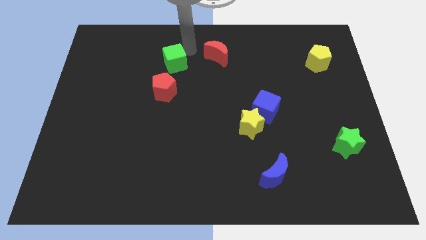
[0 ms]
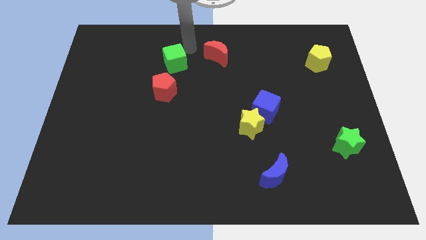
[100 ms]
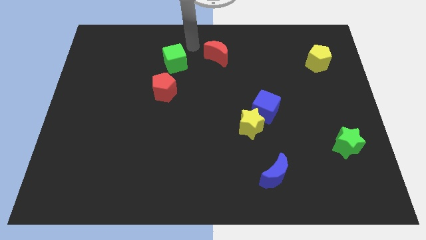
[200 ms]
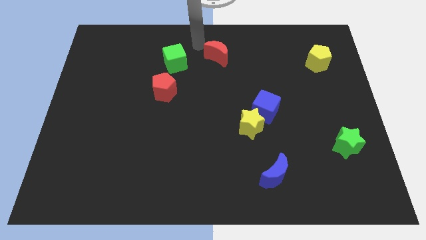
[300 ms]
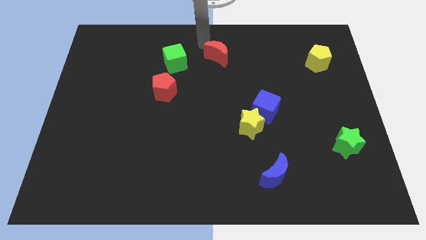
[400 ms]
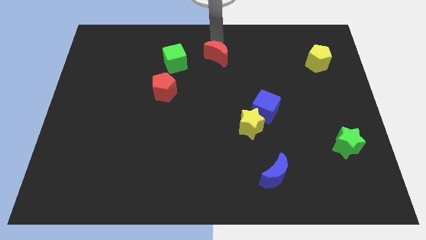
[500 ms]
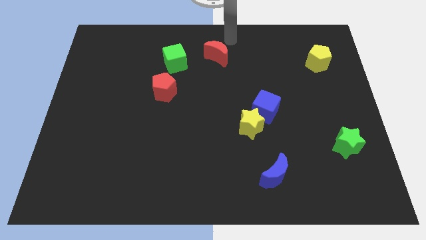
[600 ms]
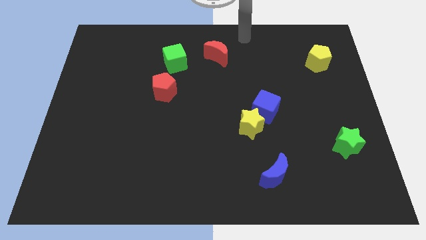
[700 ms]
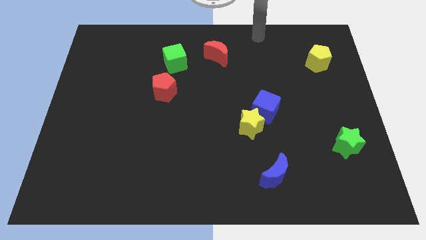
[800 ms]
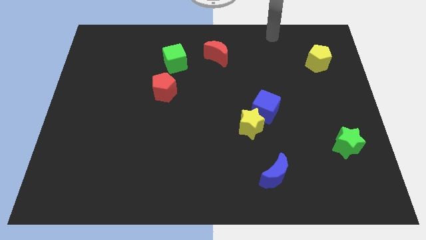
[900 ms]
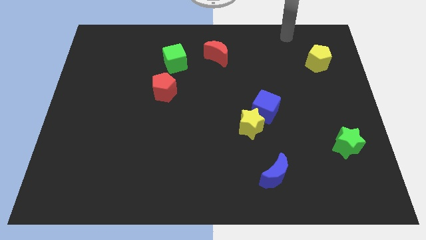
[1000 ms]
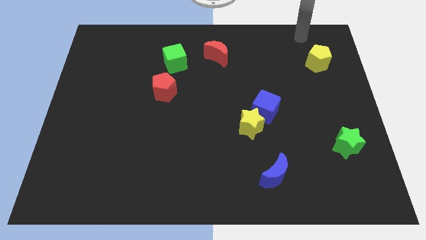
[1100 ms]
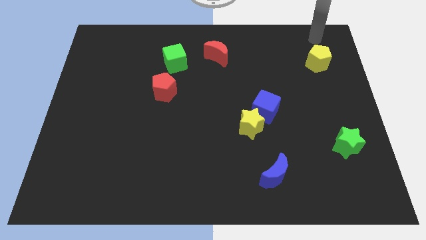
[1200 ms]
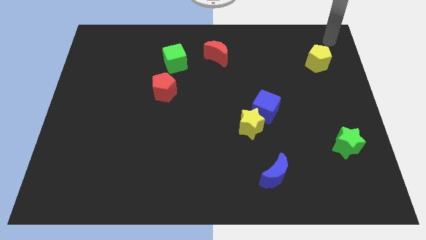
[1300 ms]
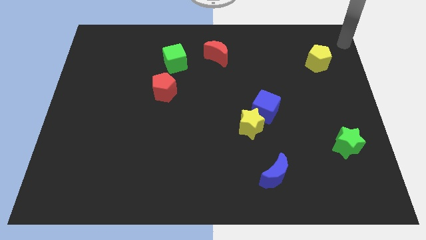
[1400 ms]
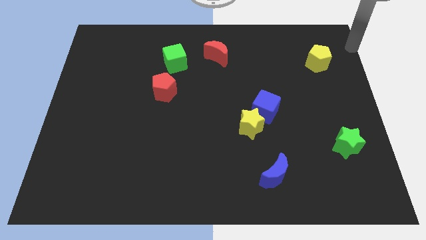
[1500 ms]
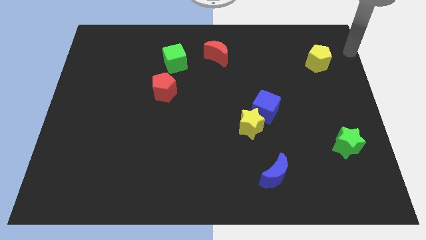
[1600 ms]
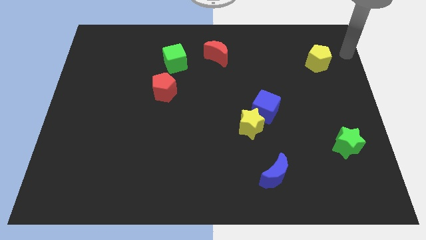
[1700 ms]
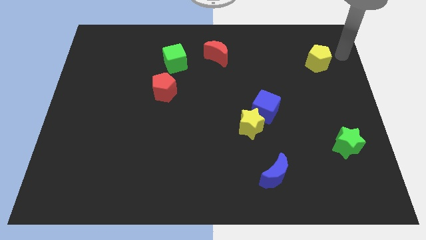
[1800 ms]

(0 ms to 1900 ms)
slide the yellow pentagon diagonally to blue cube

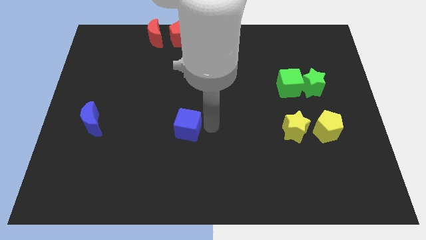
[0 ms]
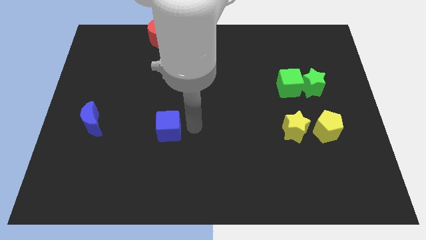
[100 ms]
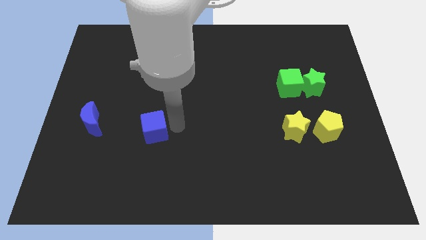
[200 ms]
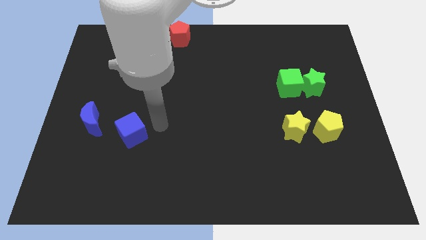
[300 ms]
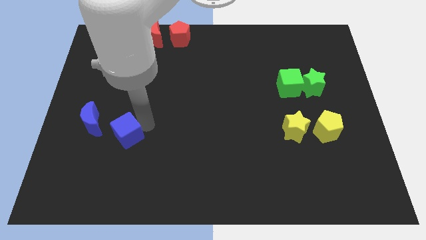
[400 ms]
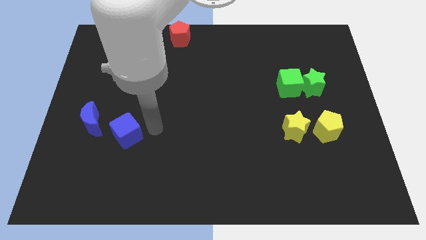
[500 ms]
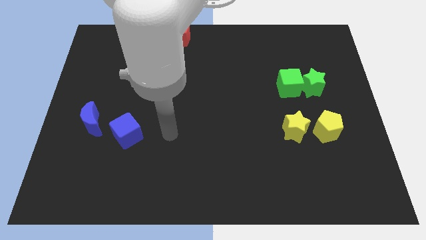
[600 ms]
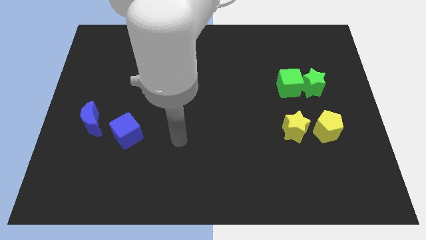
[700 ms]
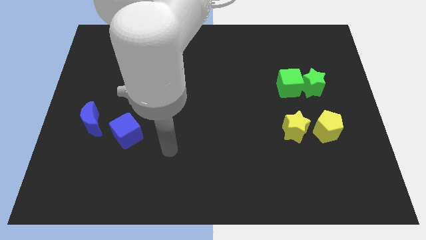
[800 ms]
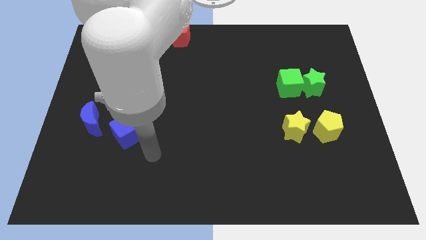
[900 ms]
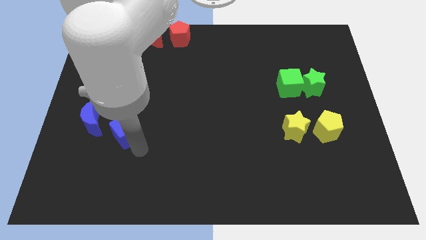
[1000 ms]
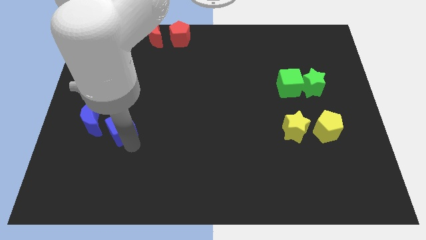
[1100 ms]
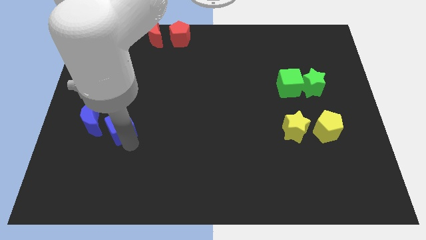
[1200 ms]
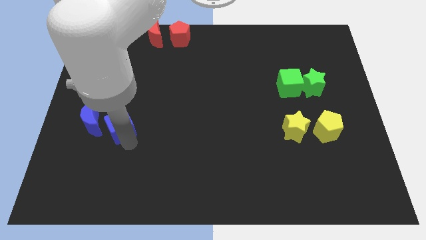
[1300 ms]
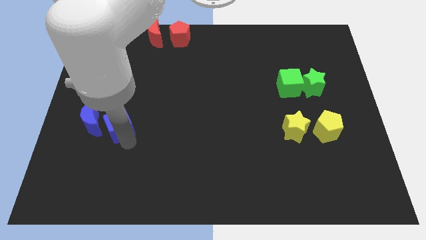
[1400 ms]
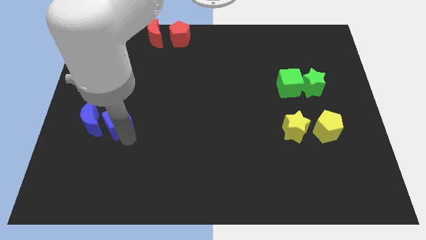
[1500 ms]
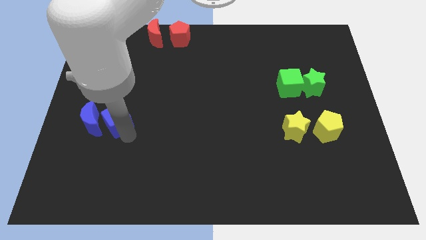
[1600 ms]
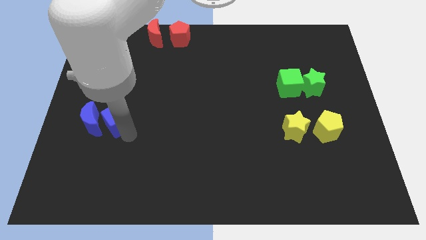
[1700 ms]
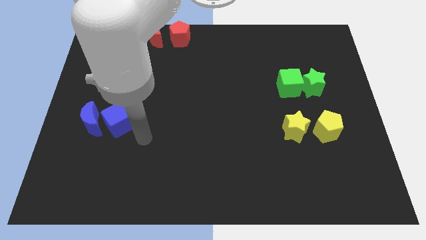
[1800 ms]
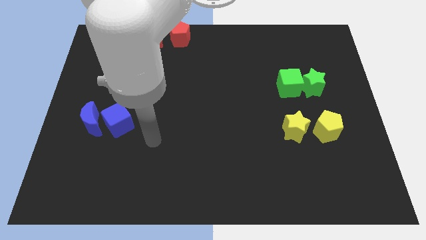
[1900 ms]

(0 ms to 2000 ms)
push the blue cube to the right side of the blue moon

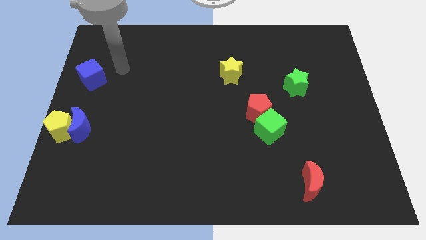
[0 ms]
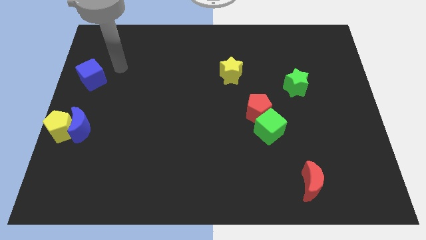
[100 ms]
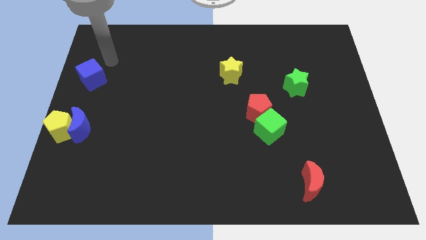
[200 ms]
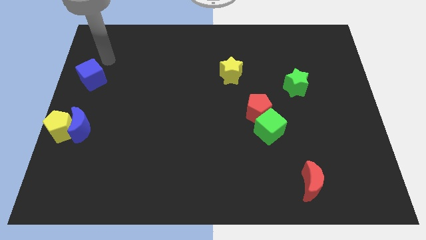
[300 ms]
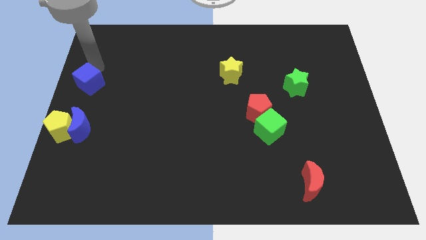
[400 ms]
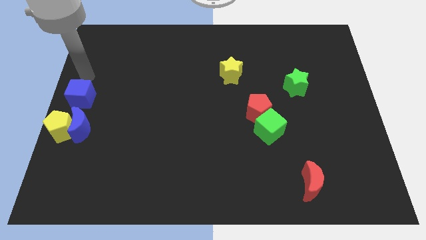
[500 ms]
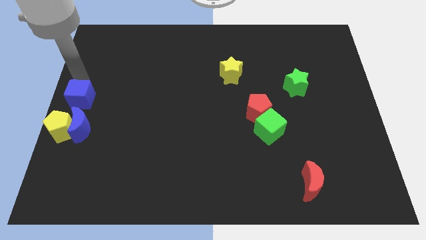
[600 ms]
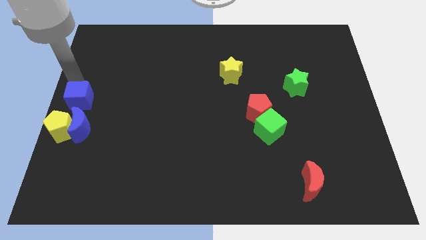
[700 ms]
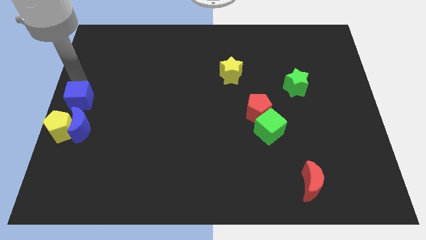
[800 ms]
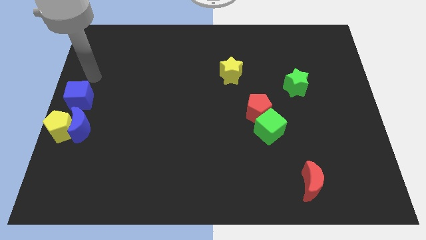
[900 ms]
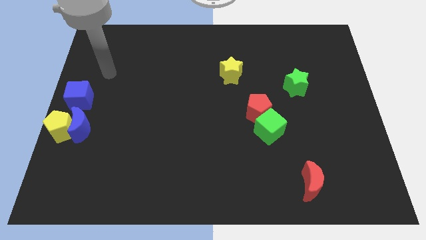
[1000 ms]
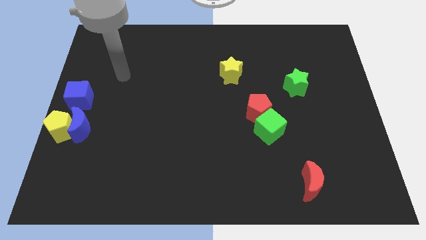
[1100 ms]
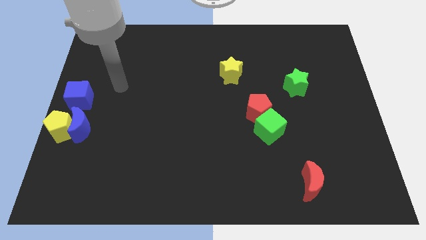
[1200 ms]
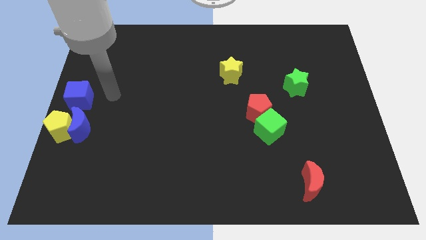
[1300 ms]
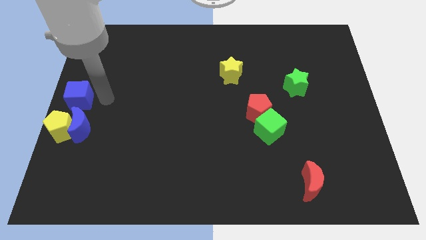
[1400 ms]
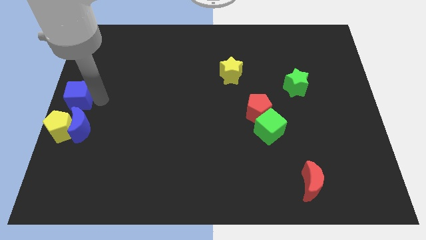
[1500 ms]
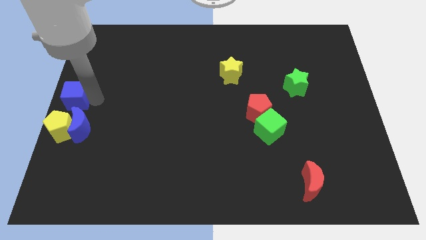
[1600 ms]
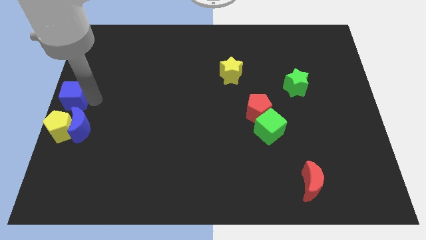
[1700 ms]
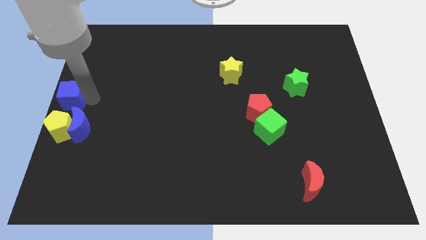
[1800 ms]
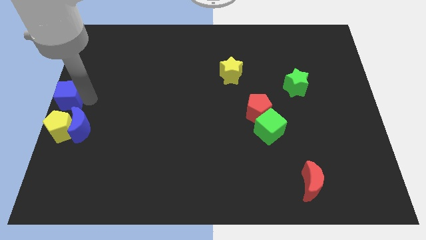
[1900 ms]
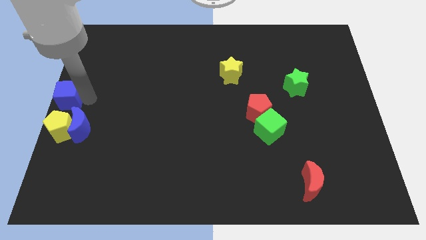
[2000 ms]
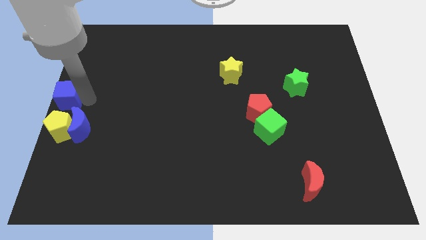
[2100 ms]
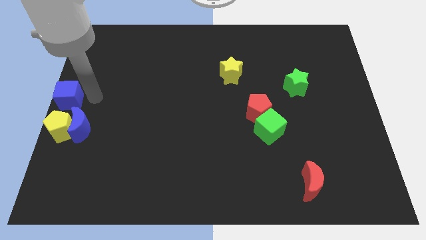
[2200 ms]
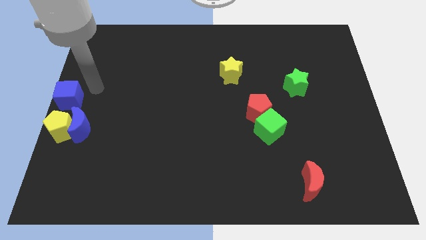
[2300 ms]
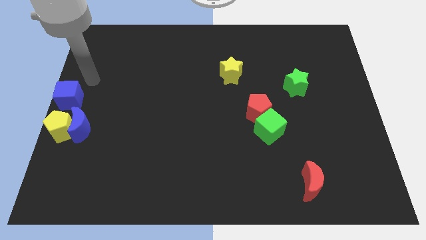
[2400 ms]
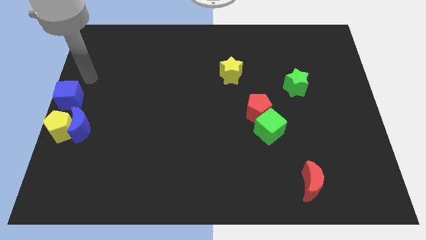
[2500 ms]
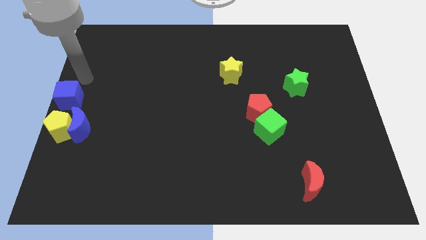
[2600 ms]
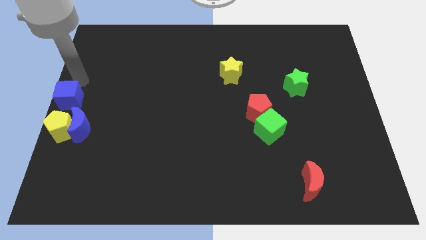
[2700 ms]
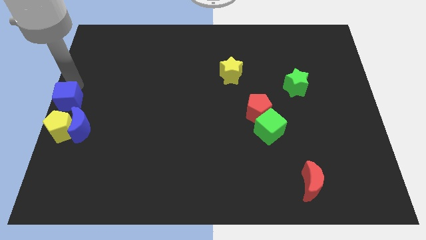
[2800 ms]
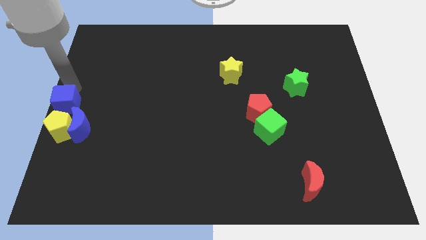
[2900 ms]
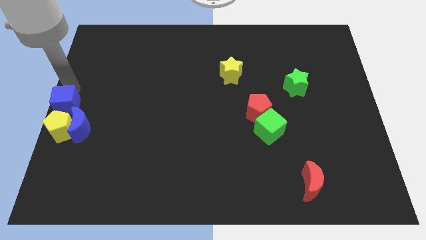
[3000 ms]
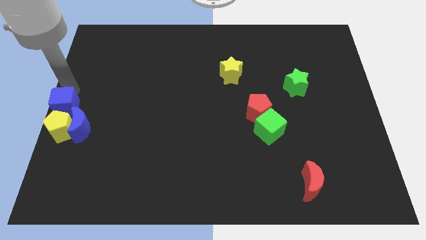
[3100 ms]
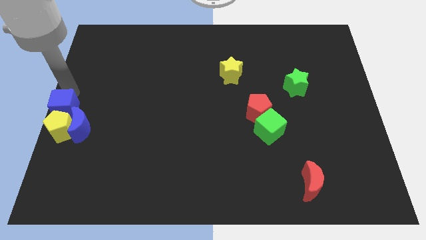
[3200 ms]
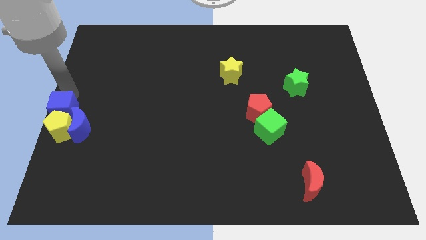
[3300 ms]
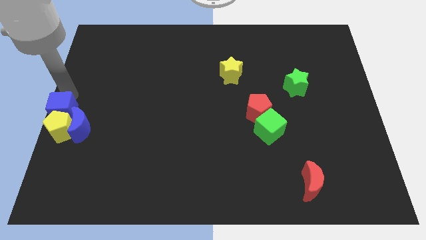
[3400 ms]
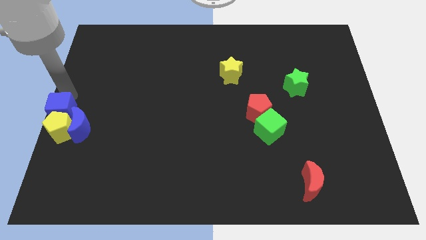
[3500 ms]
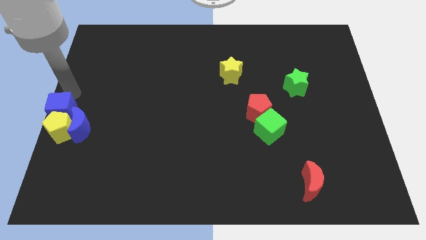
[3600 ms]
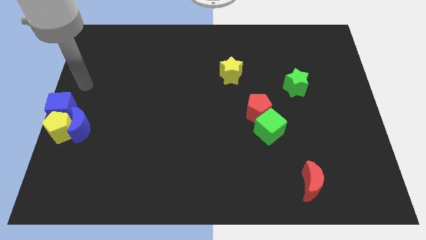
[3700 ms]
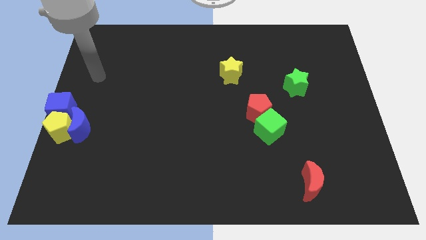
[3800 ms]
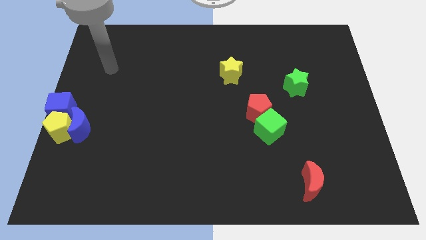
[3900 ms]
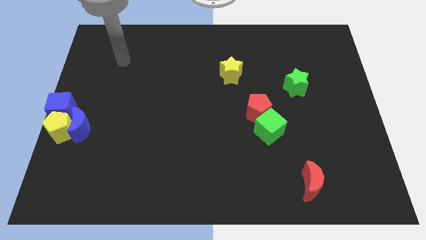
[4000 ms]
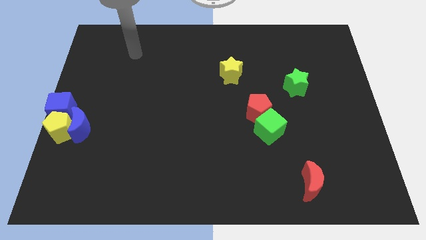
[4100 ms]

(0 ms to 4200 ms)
slide the blue cube into the yellow pentagon

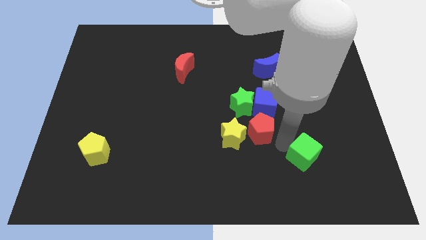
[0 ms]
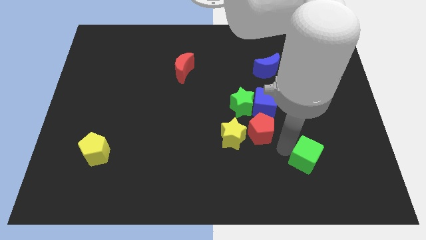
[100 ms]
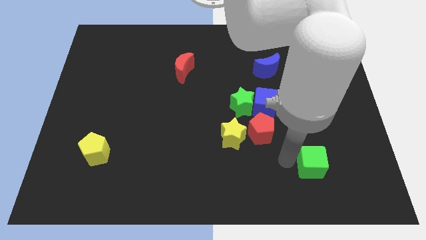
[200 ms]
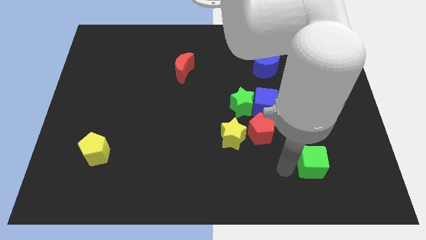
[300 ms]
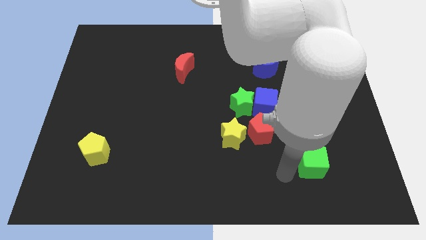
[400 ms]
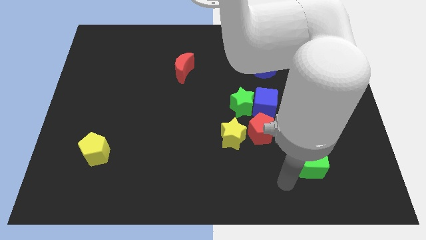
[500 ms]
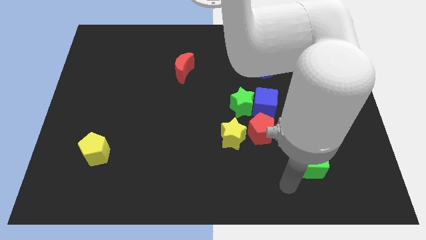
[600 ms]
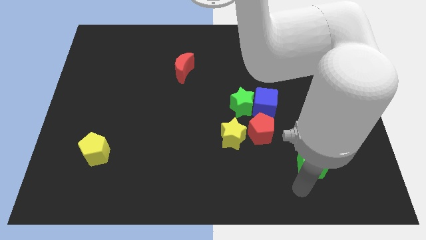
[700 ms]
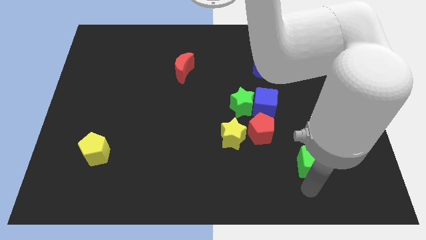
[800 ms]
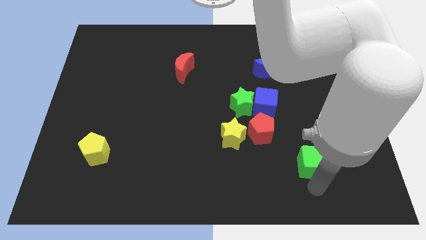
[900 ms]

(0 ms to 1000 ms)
point your arm below green cube
